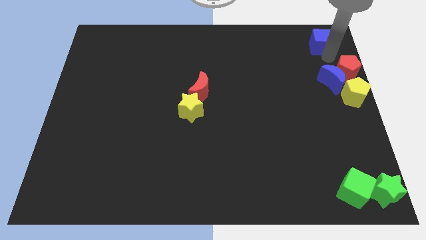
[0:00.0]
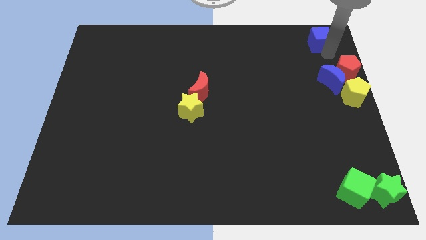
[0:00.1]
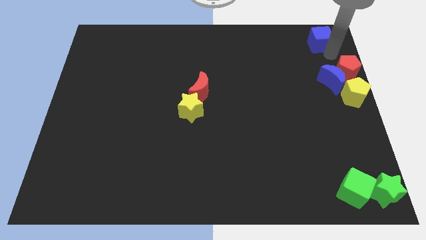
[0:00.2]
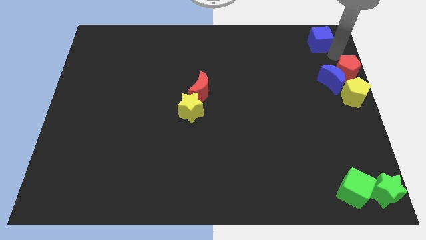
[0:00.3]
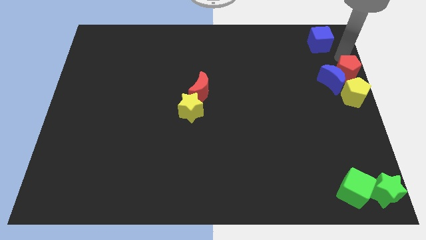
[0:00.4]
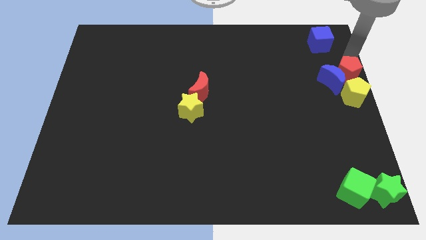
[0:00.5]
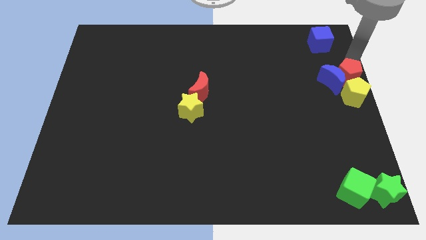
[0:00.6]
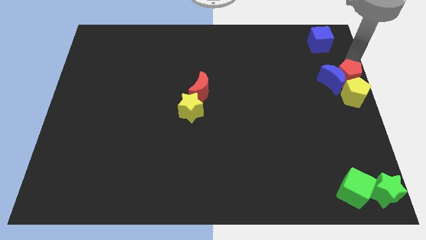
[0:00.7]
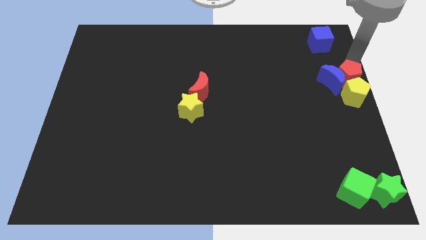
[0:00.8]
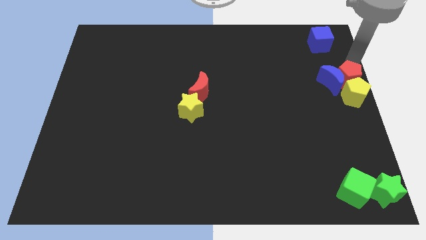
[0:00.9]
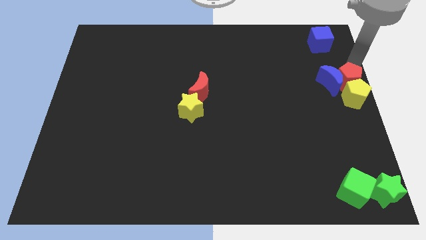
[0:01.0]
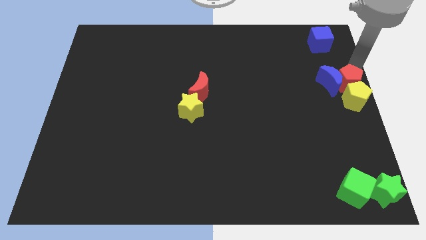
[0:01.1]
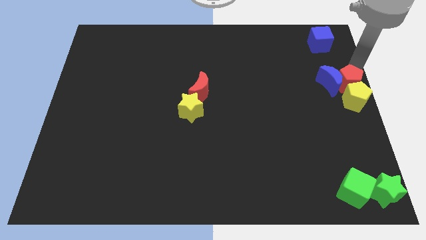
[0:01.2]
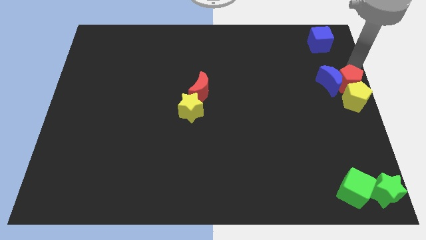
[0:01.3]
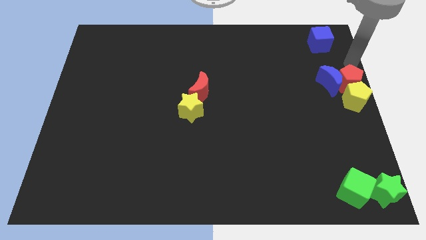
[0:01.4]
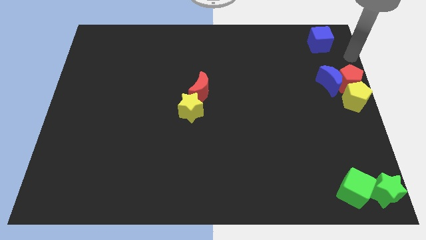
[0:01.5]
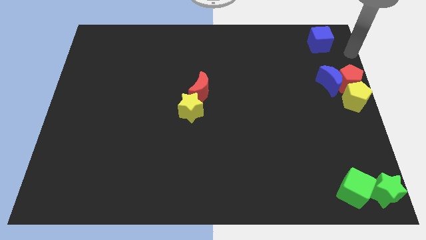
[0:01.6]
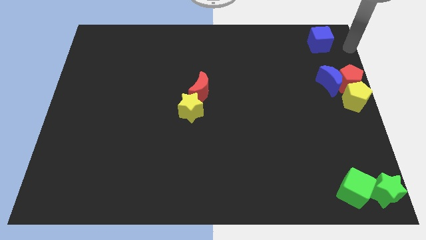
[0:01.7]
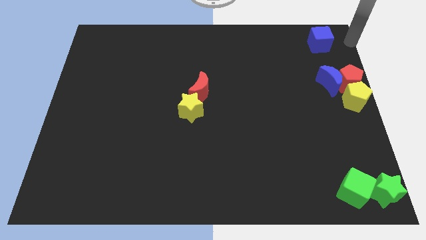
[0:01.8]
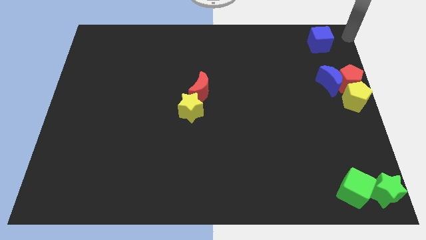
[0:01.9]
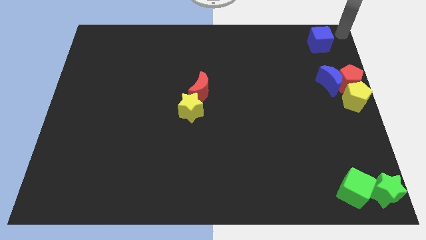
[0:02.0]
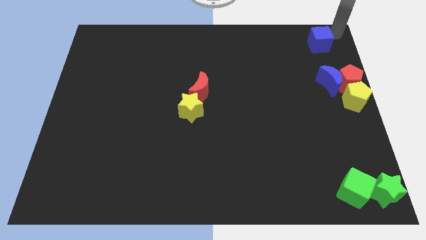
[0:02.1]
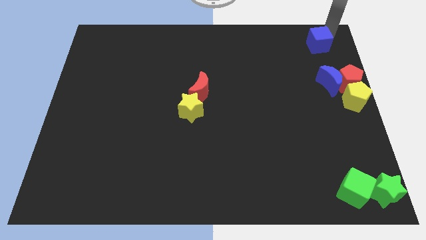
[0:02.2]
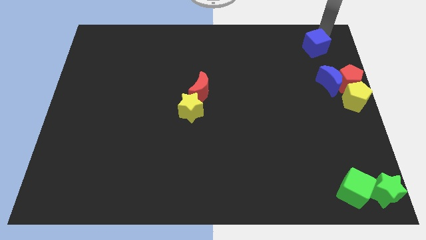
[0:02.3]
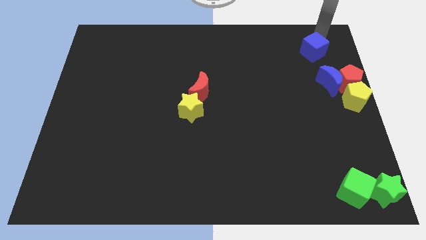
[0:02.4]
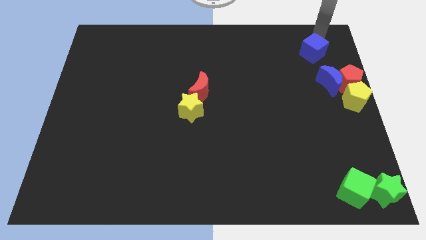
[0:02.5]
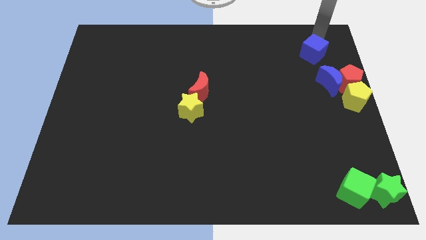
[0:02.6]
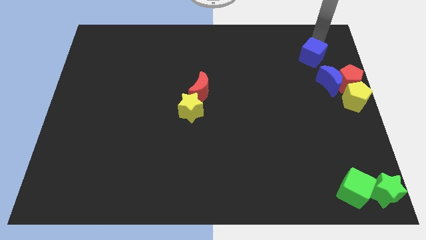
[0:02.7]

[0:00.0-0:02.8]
push the red pentagon into the yellow pentagon from the top

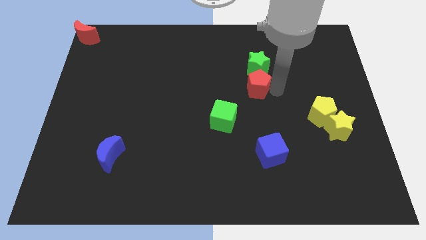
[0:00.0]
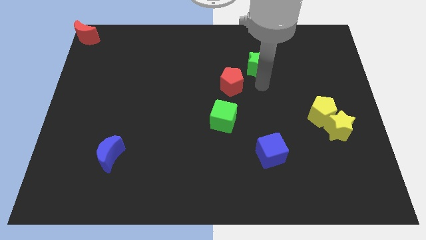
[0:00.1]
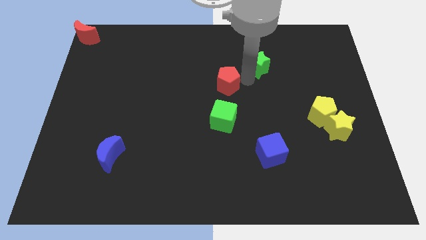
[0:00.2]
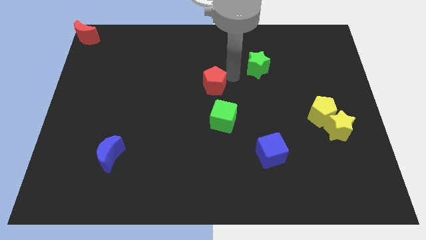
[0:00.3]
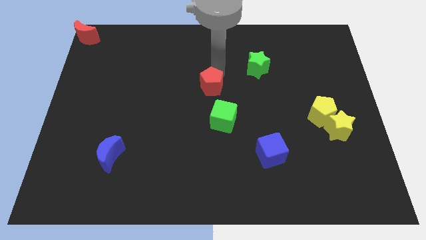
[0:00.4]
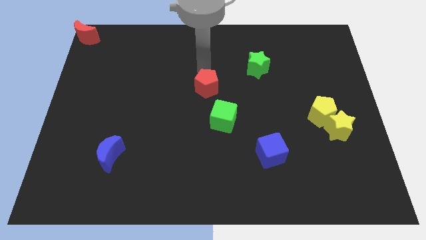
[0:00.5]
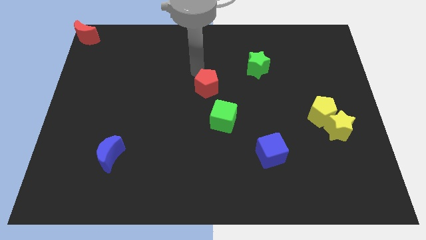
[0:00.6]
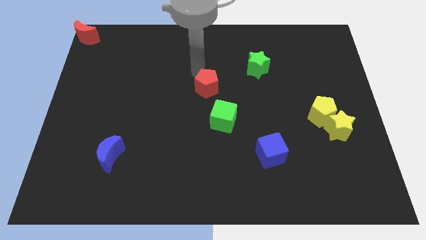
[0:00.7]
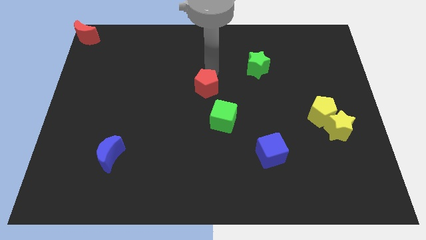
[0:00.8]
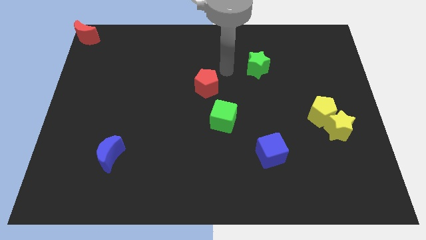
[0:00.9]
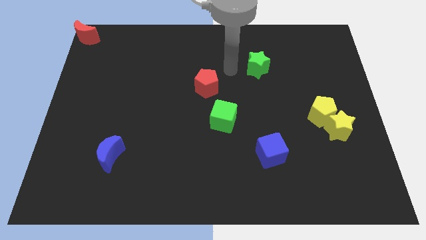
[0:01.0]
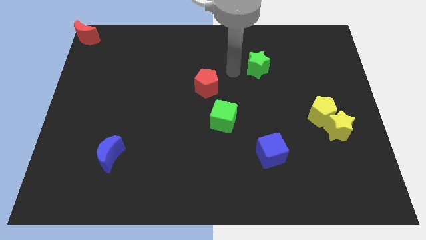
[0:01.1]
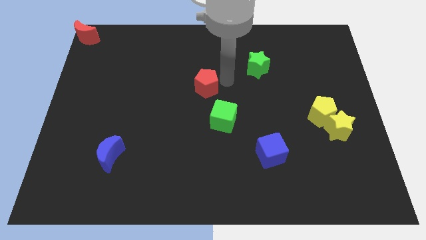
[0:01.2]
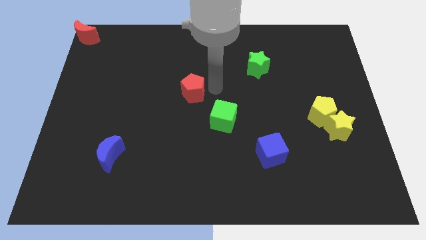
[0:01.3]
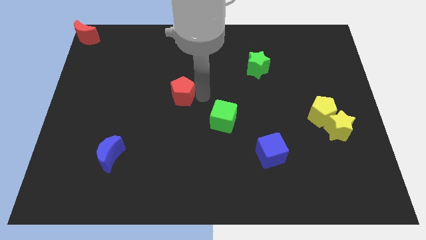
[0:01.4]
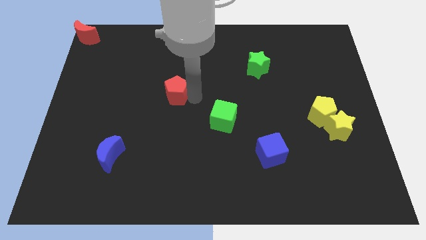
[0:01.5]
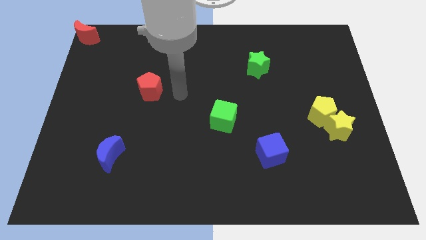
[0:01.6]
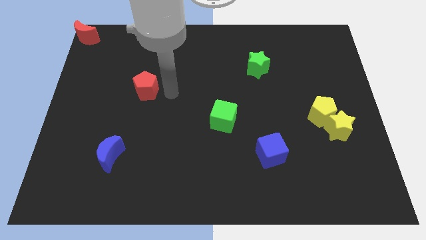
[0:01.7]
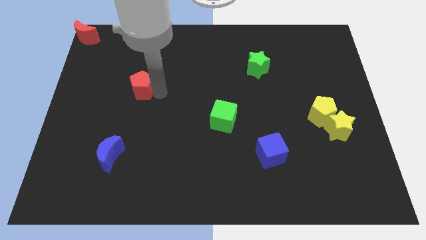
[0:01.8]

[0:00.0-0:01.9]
move the red pentagon away from the green star

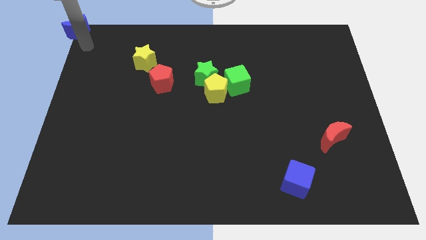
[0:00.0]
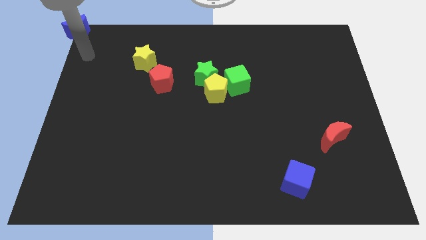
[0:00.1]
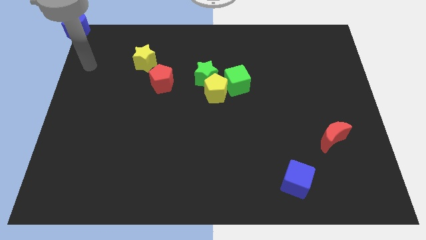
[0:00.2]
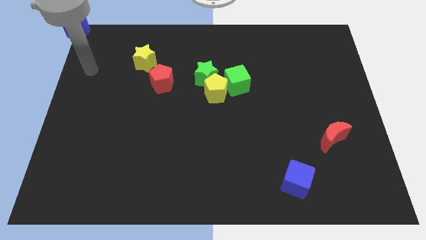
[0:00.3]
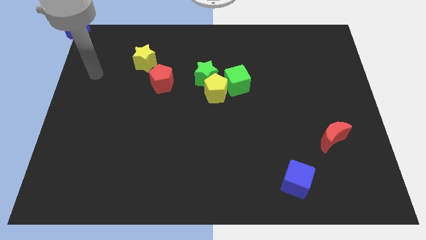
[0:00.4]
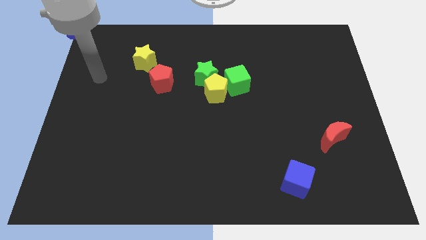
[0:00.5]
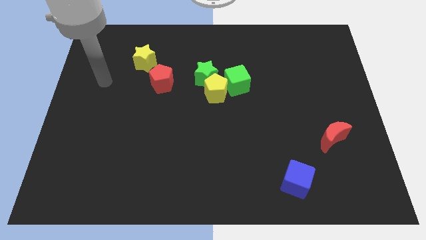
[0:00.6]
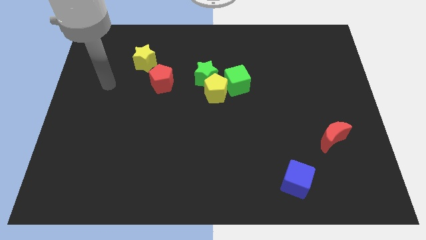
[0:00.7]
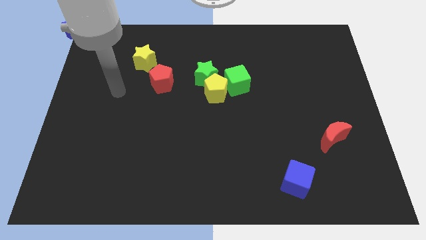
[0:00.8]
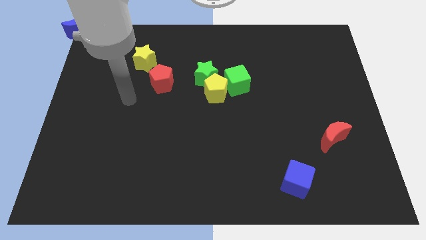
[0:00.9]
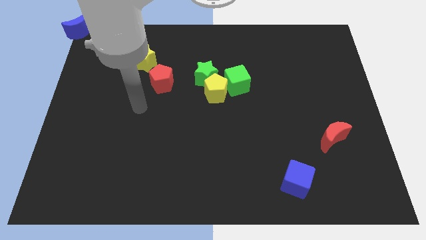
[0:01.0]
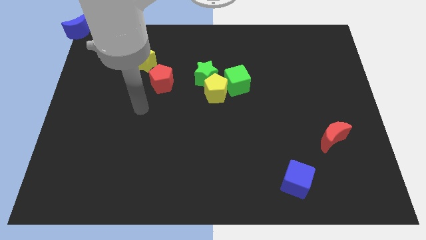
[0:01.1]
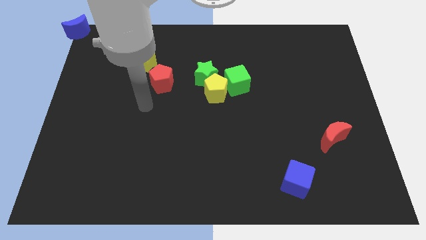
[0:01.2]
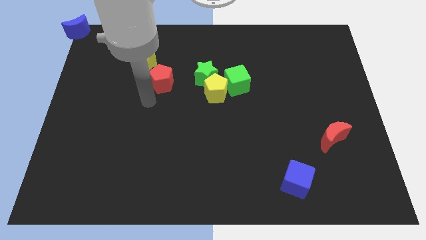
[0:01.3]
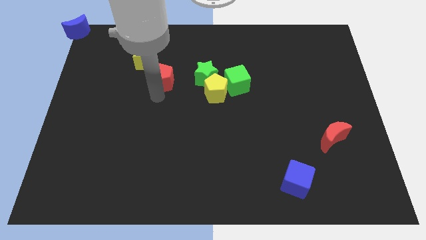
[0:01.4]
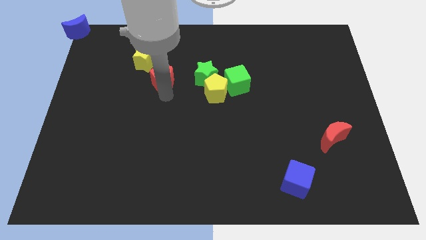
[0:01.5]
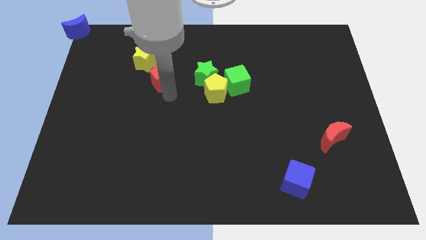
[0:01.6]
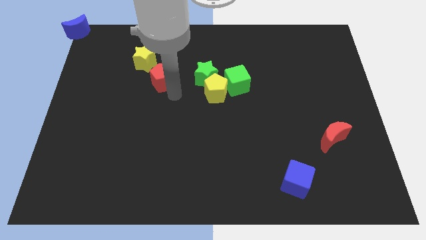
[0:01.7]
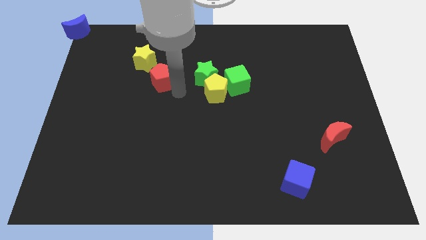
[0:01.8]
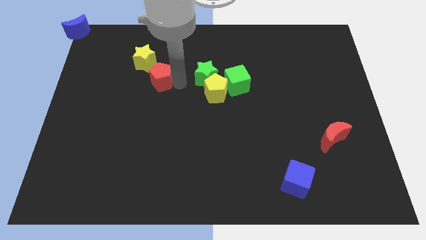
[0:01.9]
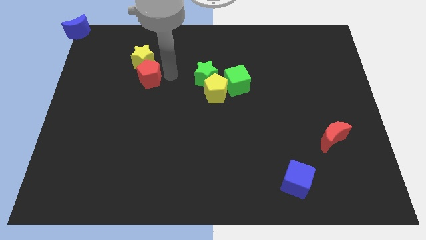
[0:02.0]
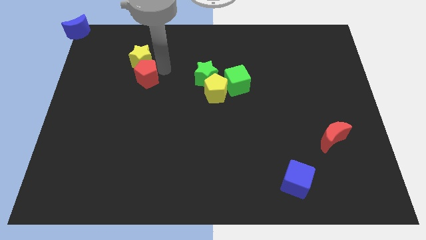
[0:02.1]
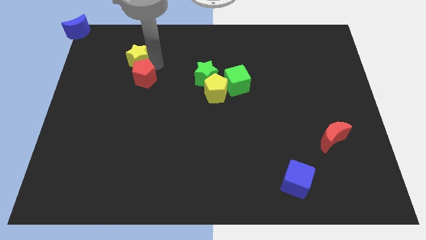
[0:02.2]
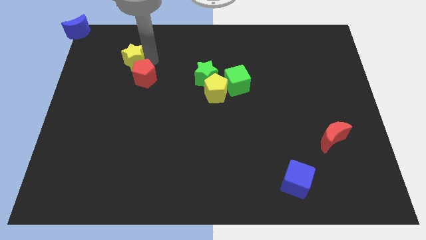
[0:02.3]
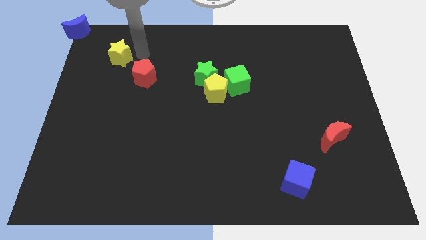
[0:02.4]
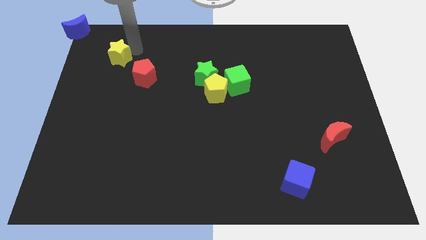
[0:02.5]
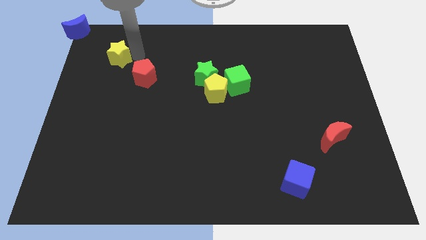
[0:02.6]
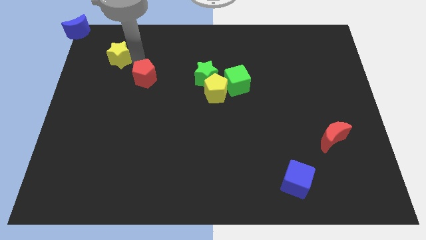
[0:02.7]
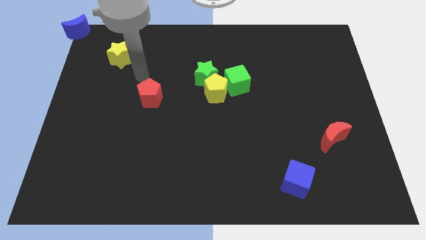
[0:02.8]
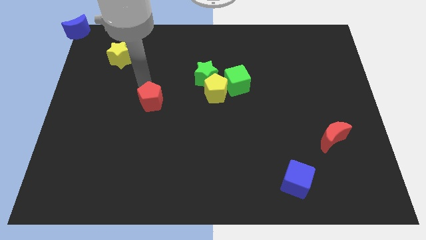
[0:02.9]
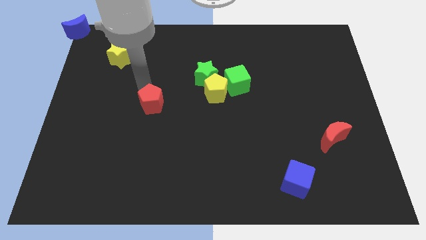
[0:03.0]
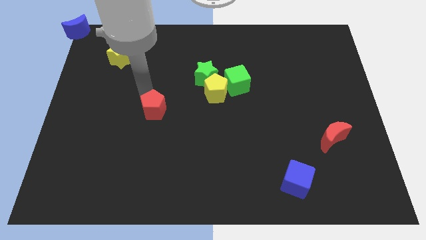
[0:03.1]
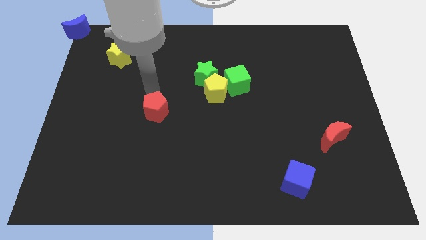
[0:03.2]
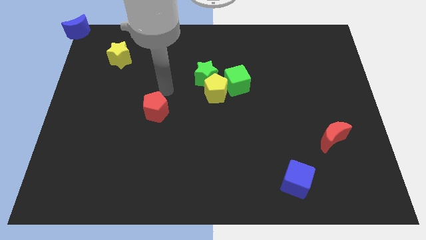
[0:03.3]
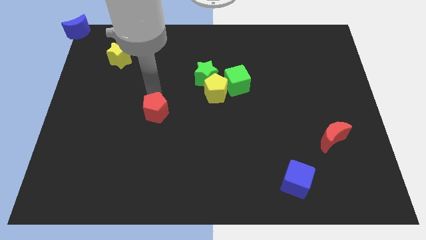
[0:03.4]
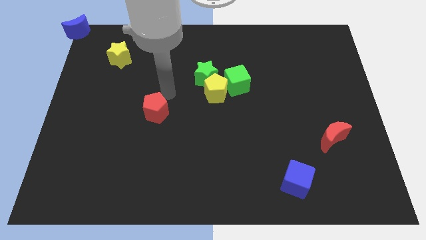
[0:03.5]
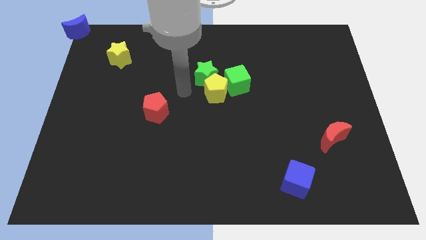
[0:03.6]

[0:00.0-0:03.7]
push the yellow star and red pentagon in opposite directions

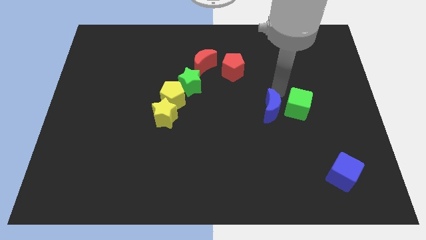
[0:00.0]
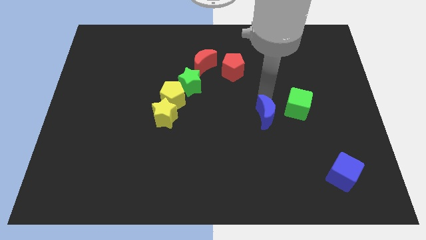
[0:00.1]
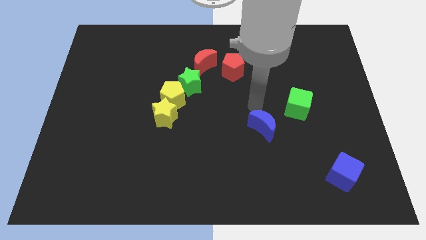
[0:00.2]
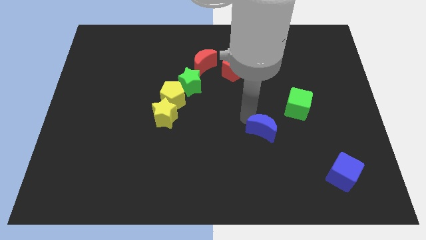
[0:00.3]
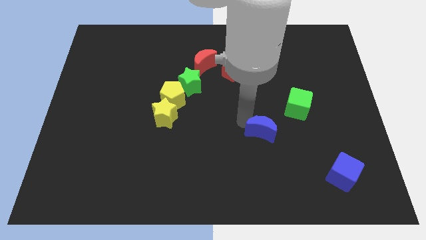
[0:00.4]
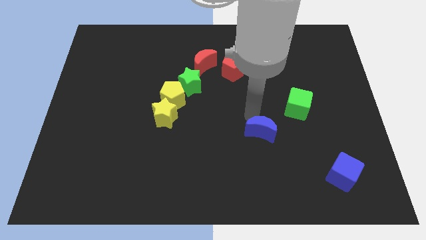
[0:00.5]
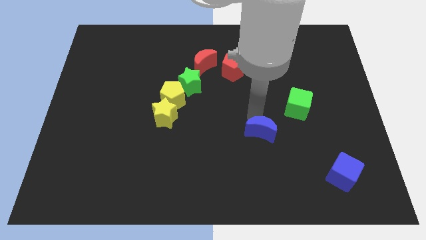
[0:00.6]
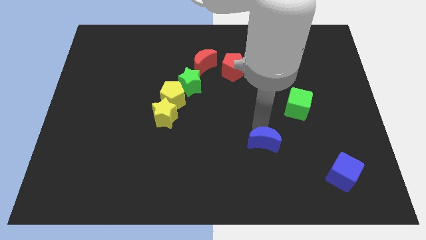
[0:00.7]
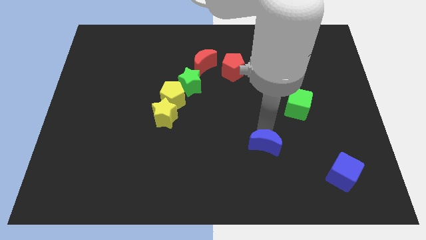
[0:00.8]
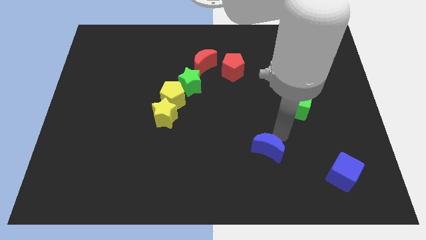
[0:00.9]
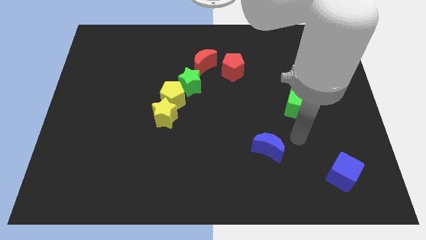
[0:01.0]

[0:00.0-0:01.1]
separate blue moon from green cube
